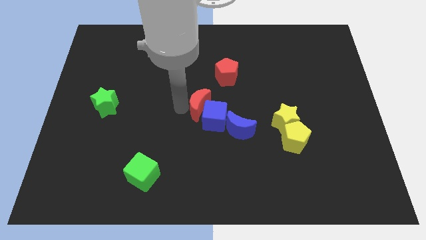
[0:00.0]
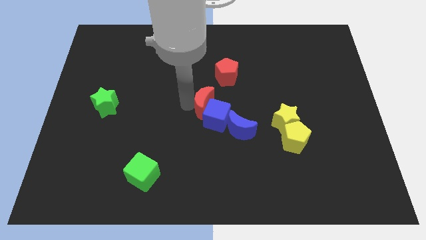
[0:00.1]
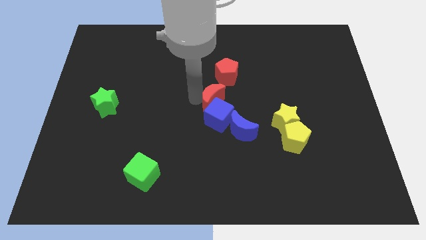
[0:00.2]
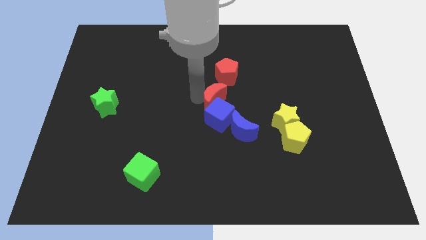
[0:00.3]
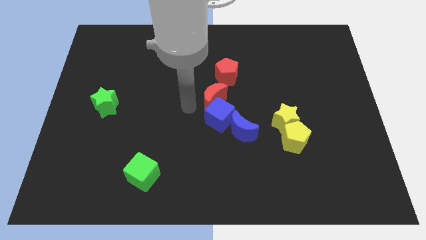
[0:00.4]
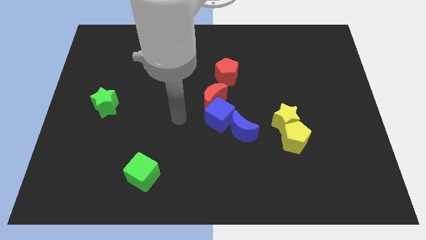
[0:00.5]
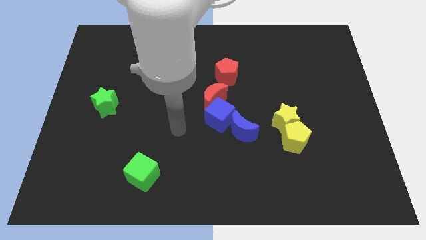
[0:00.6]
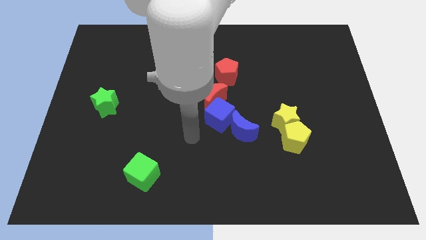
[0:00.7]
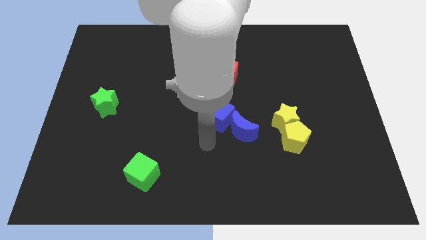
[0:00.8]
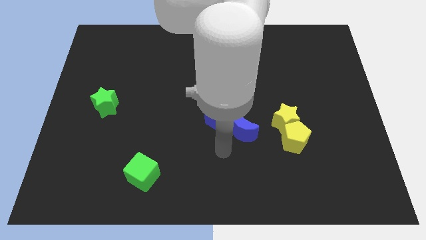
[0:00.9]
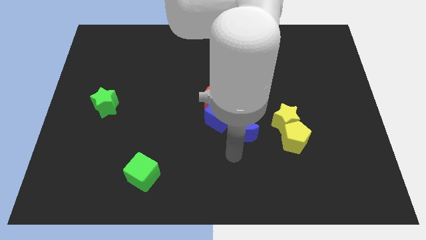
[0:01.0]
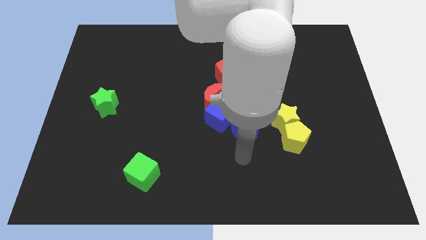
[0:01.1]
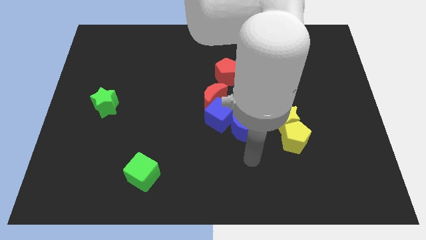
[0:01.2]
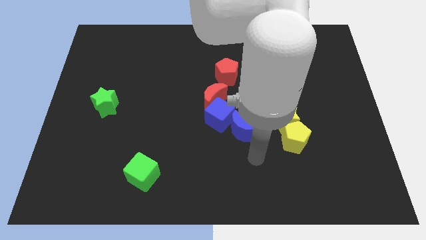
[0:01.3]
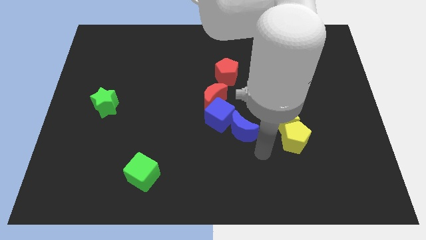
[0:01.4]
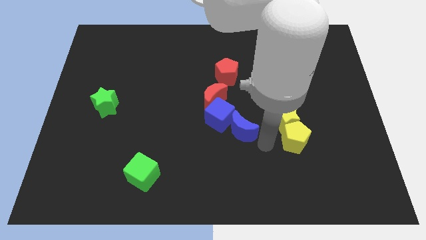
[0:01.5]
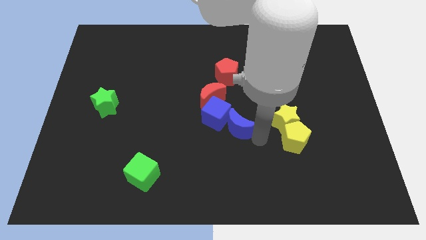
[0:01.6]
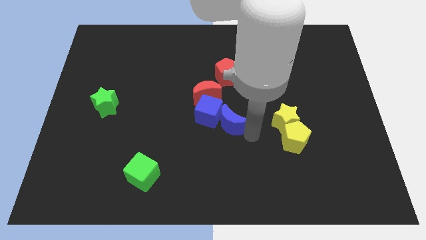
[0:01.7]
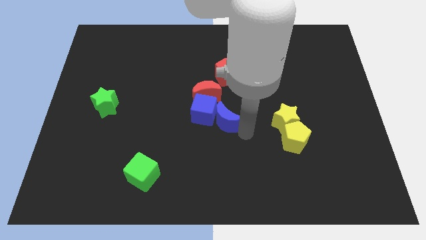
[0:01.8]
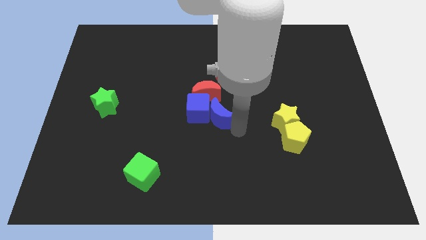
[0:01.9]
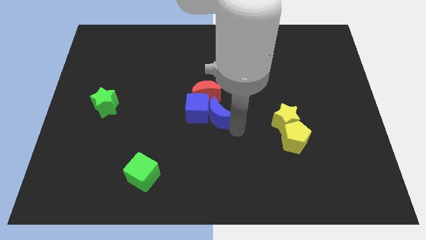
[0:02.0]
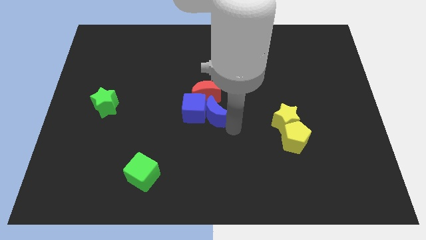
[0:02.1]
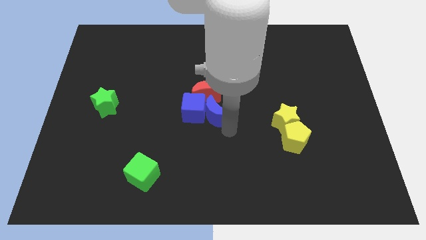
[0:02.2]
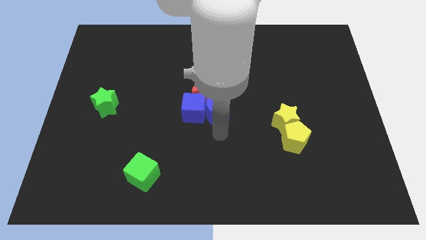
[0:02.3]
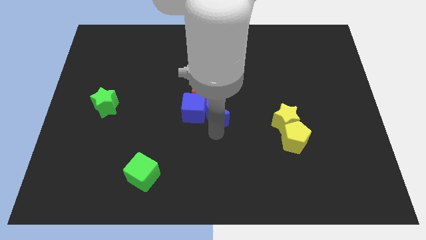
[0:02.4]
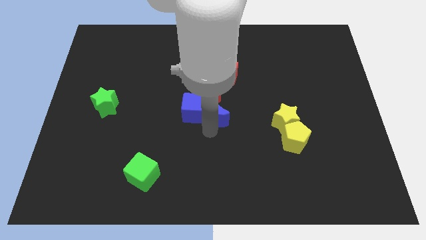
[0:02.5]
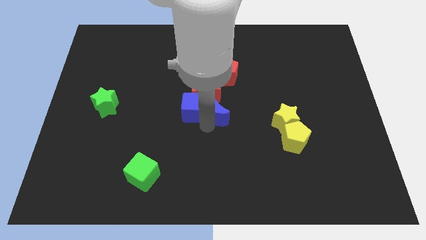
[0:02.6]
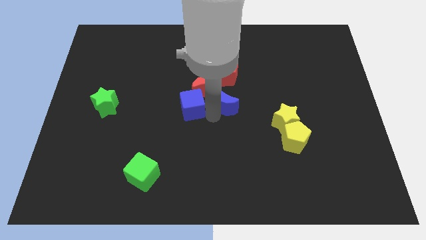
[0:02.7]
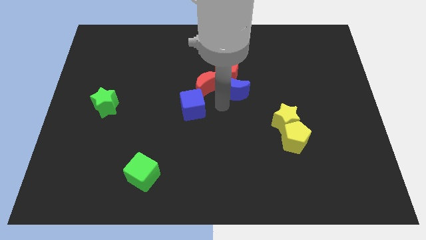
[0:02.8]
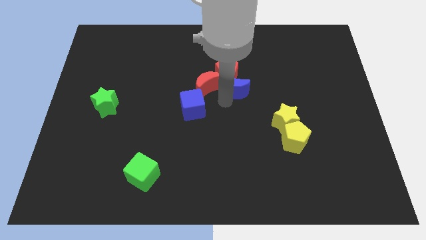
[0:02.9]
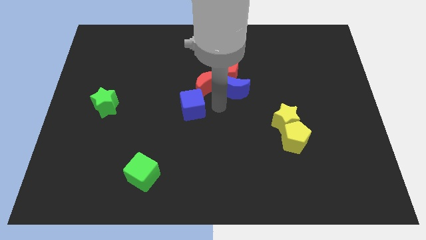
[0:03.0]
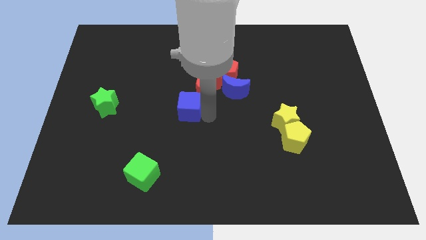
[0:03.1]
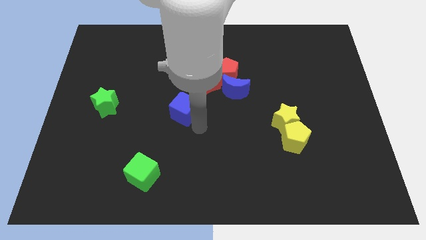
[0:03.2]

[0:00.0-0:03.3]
move the blue crescent close to the red pentagon

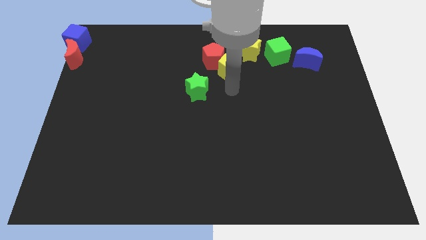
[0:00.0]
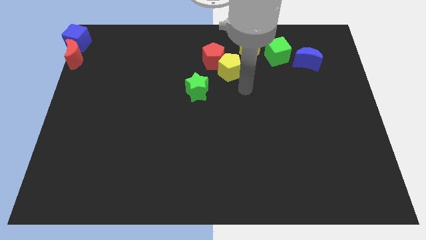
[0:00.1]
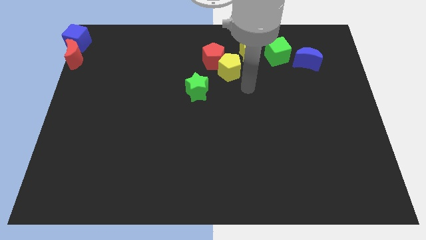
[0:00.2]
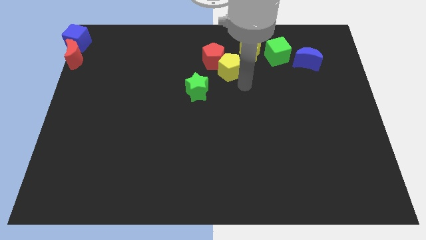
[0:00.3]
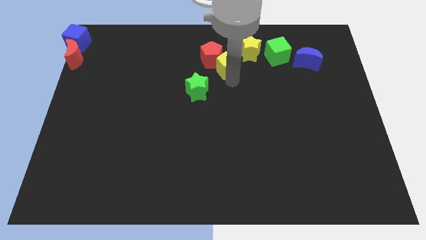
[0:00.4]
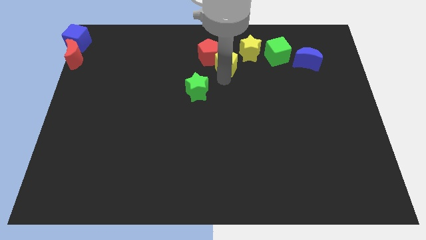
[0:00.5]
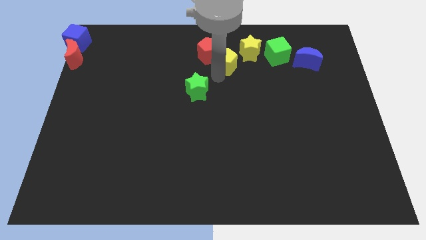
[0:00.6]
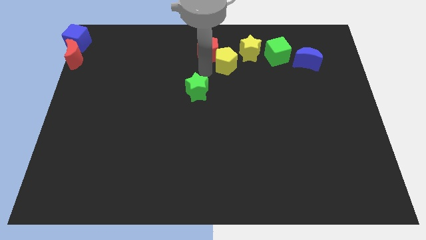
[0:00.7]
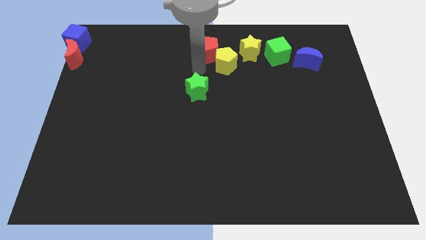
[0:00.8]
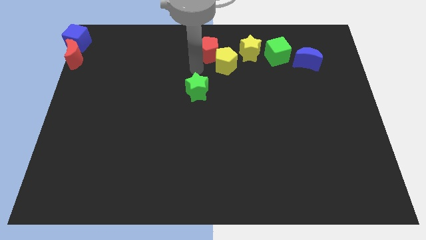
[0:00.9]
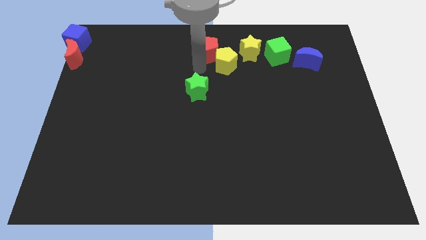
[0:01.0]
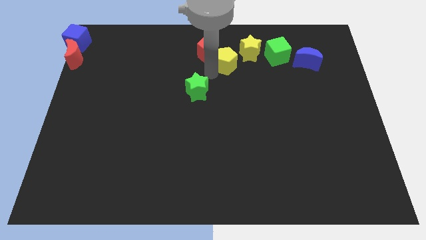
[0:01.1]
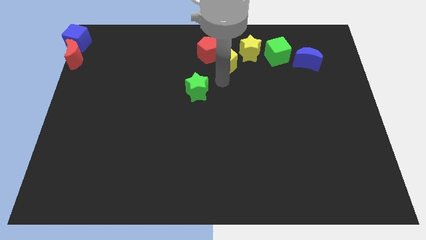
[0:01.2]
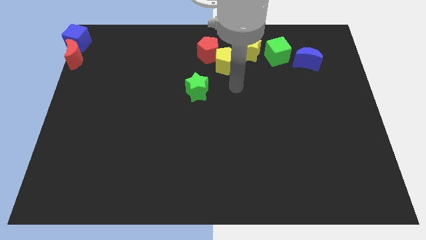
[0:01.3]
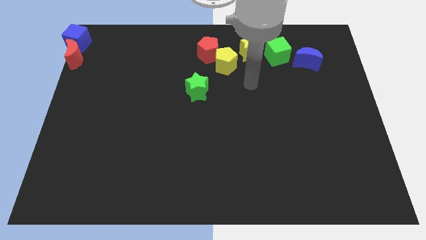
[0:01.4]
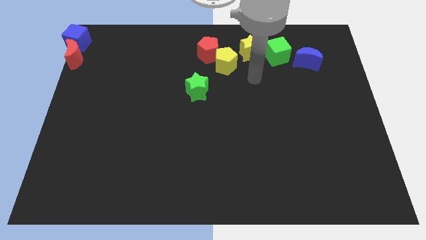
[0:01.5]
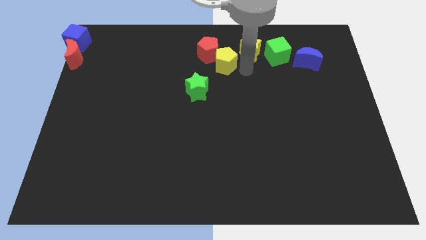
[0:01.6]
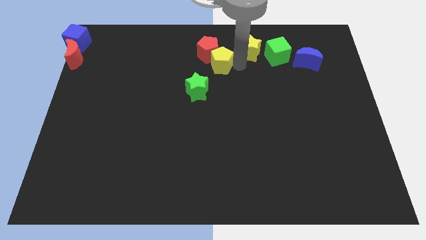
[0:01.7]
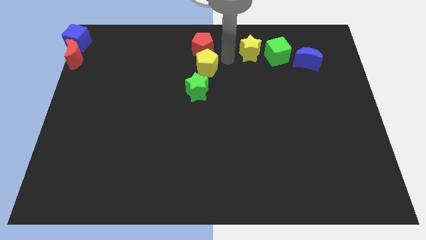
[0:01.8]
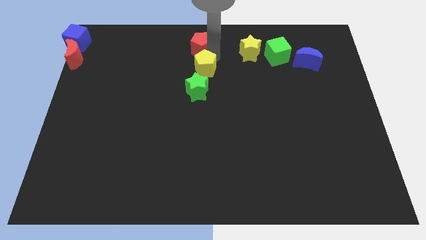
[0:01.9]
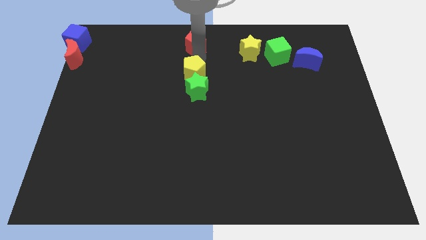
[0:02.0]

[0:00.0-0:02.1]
move the yellow pentagon to the top of the green star

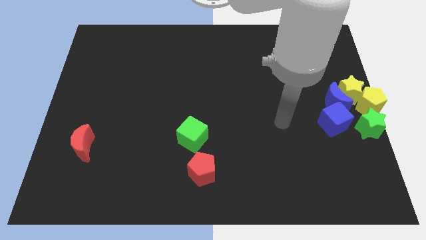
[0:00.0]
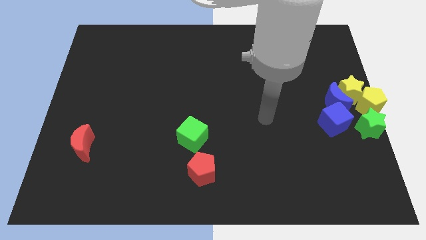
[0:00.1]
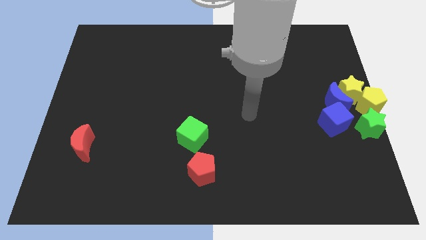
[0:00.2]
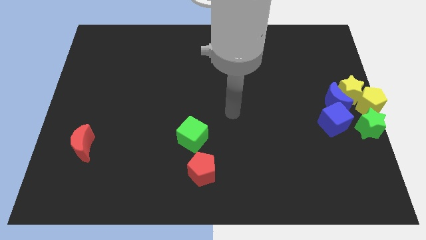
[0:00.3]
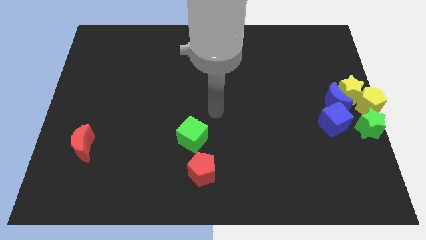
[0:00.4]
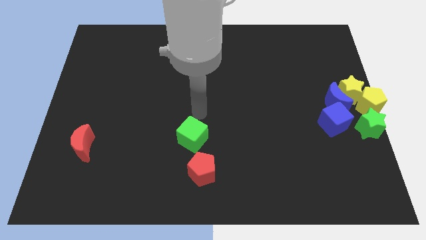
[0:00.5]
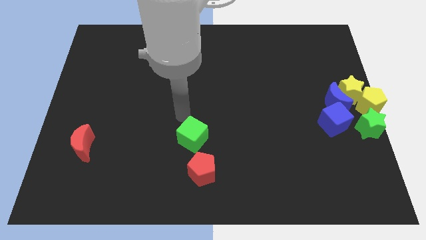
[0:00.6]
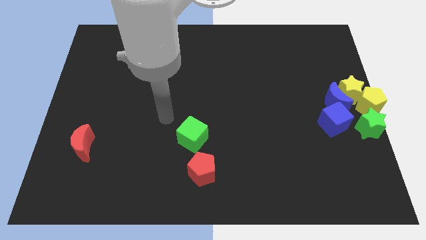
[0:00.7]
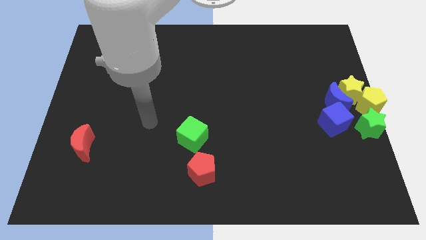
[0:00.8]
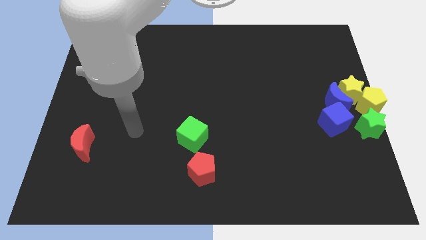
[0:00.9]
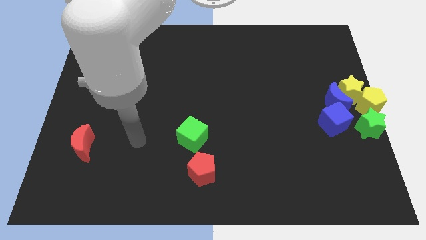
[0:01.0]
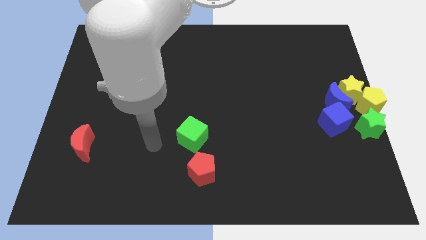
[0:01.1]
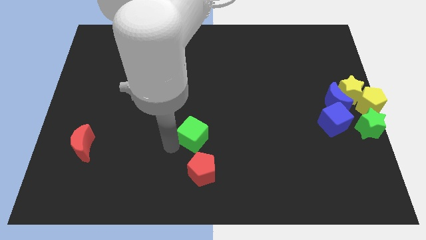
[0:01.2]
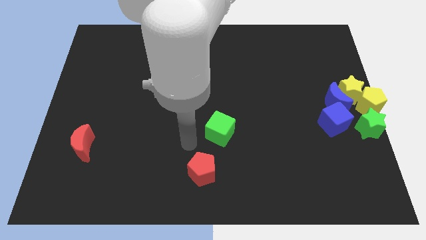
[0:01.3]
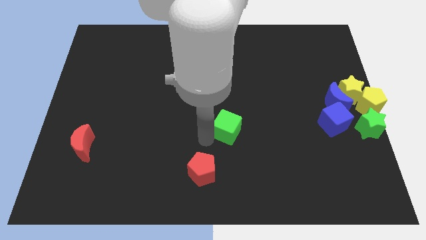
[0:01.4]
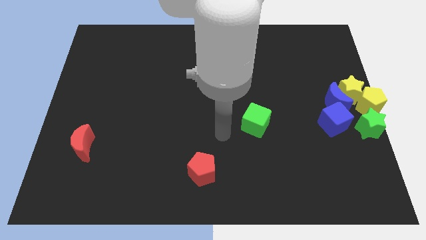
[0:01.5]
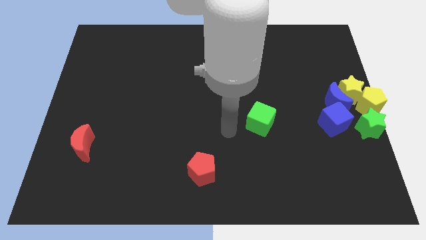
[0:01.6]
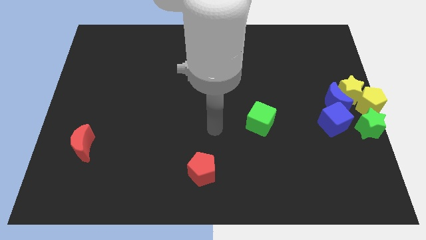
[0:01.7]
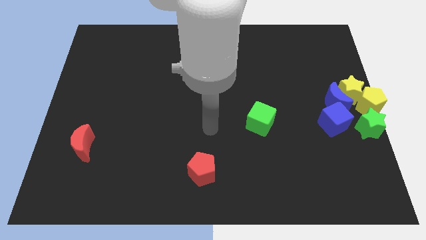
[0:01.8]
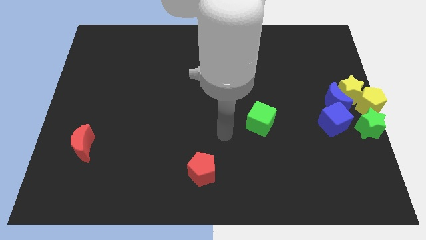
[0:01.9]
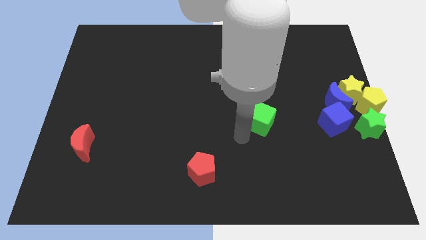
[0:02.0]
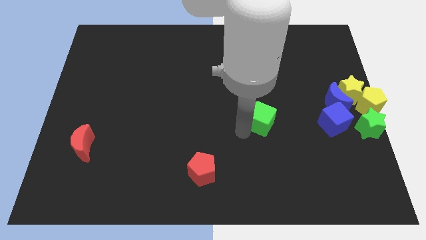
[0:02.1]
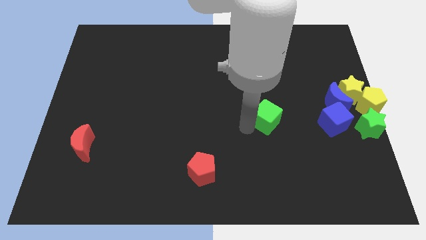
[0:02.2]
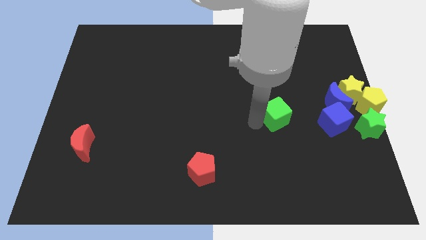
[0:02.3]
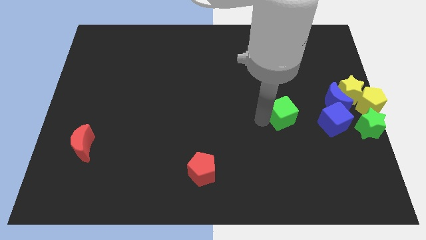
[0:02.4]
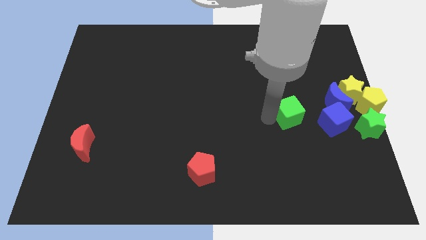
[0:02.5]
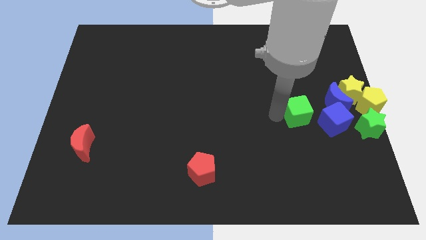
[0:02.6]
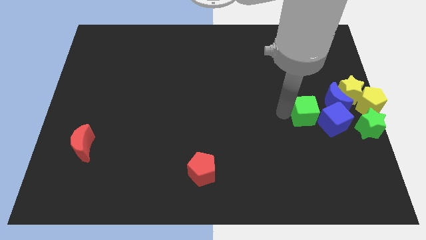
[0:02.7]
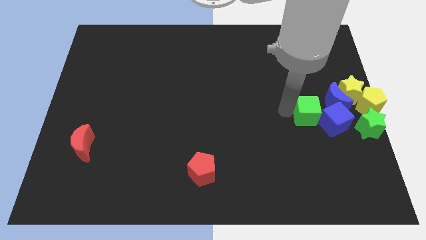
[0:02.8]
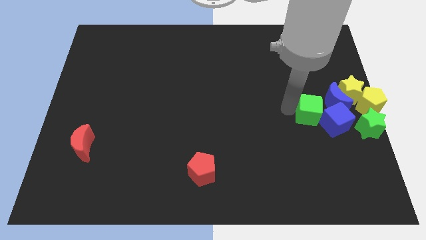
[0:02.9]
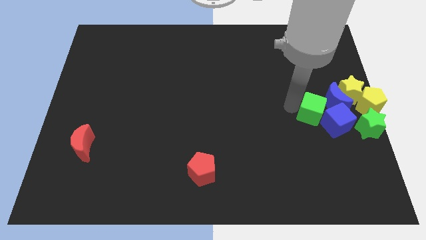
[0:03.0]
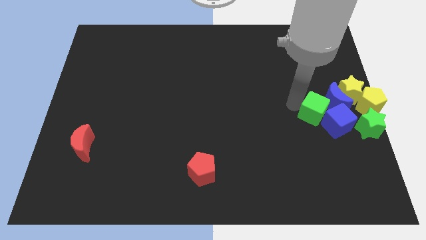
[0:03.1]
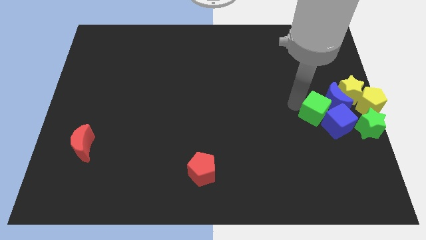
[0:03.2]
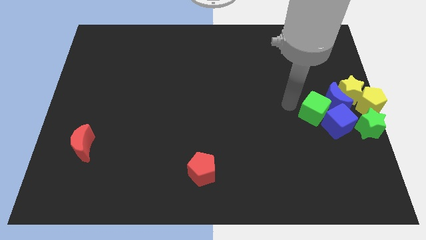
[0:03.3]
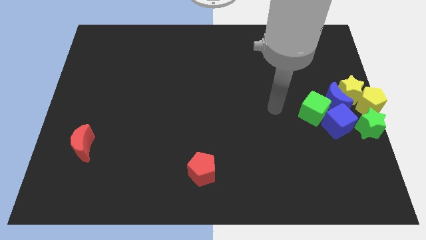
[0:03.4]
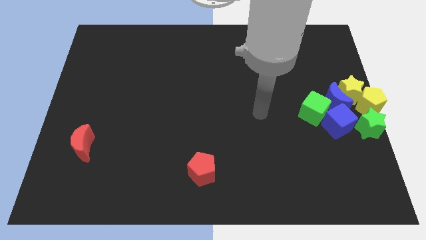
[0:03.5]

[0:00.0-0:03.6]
move the green cube left to the blue cube
